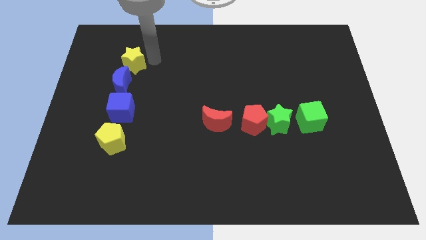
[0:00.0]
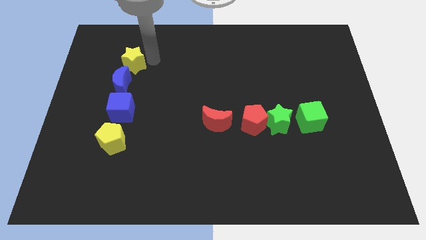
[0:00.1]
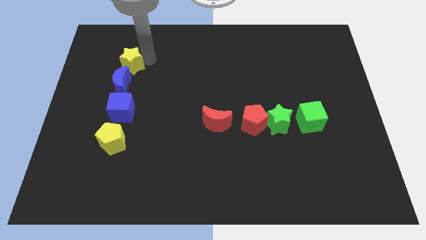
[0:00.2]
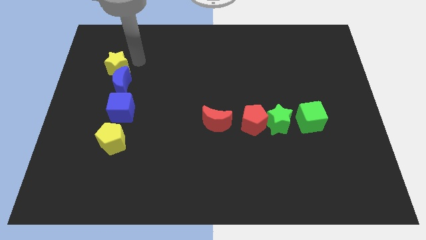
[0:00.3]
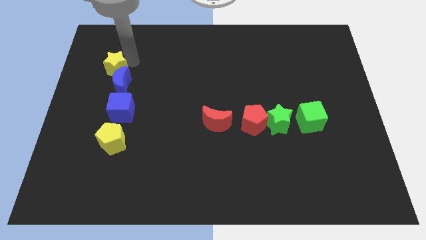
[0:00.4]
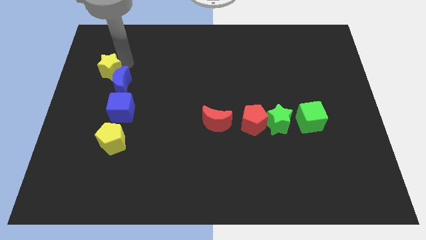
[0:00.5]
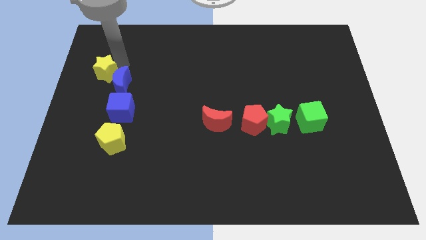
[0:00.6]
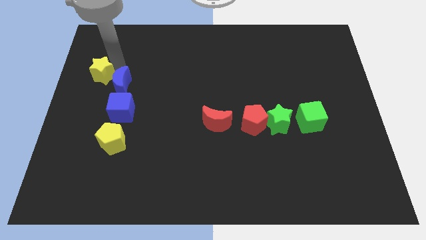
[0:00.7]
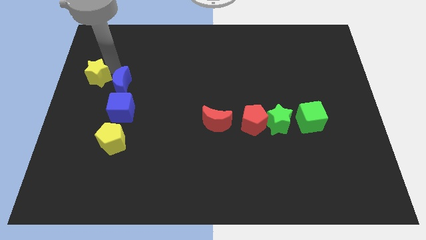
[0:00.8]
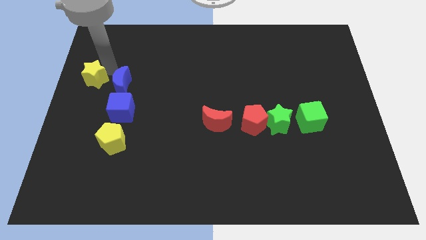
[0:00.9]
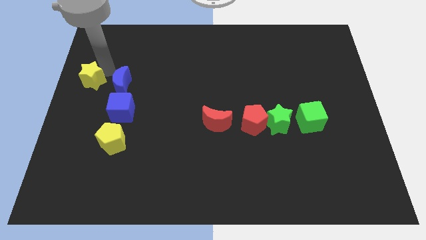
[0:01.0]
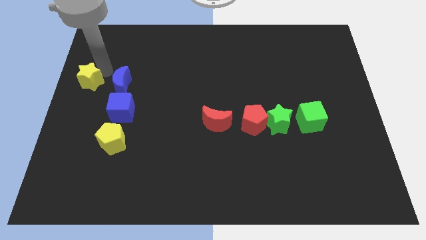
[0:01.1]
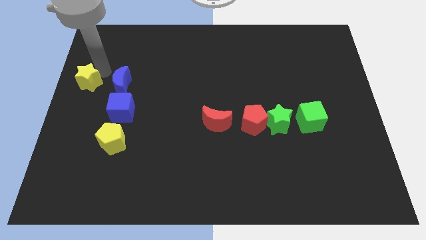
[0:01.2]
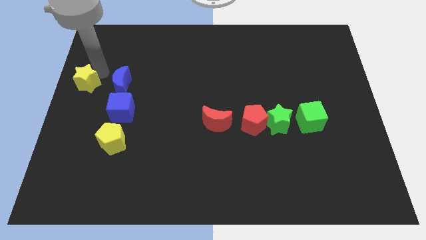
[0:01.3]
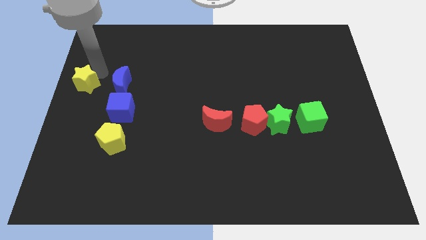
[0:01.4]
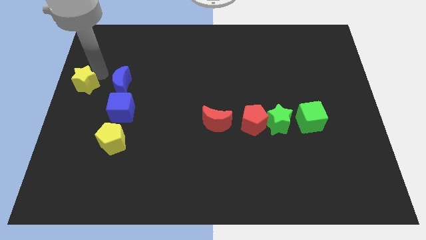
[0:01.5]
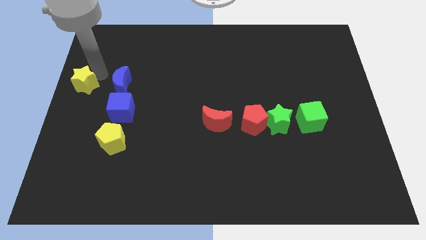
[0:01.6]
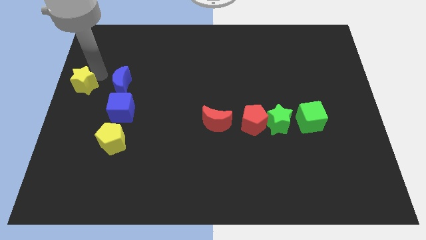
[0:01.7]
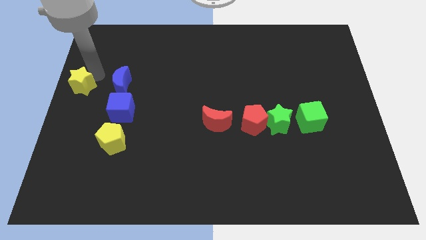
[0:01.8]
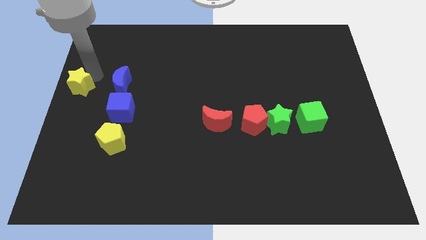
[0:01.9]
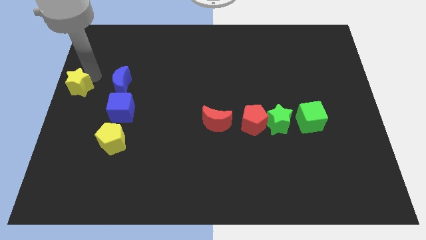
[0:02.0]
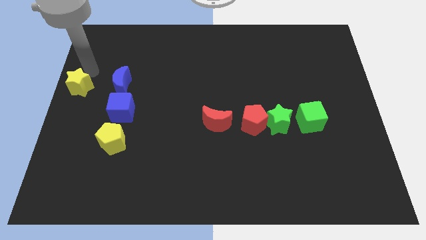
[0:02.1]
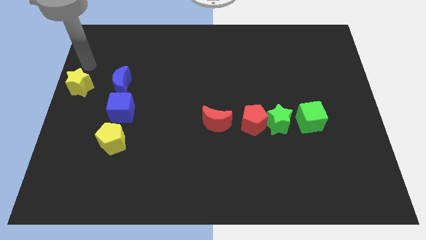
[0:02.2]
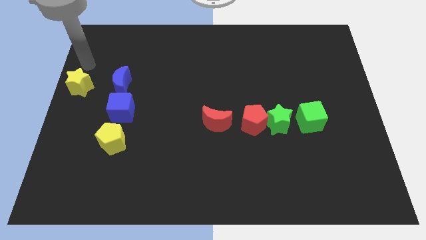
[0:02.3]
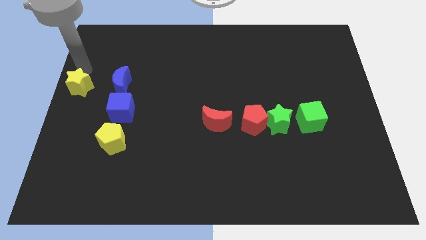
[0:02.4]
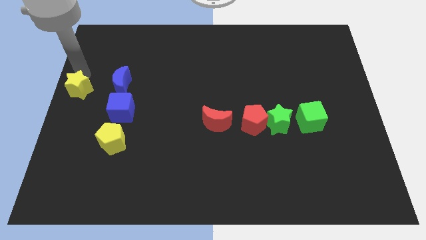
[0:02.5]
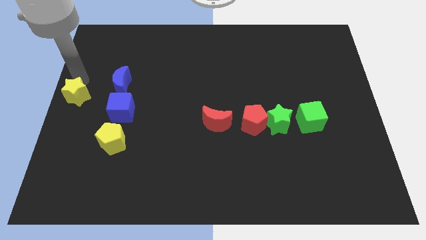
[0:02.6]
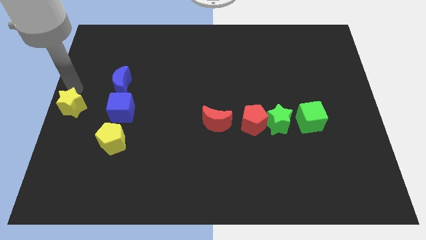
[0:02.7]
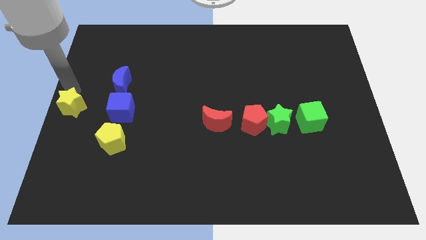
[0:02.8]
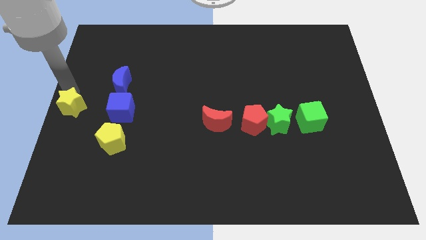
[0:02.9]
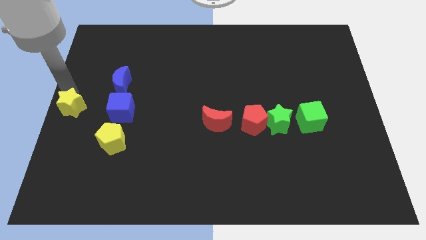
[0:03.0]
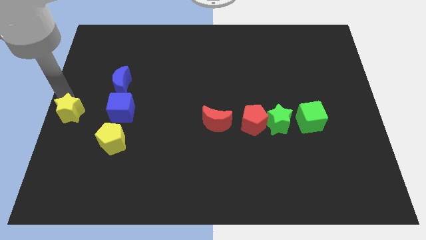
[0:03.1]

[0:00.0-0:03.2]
push yellow star to the left of blue cube

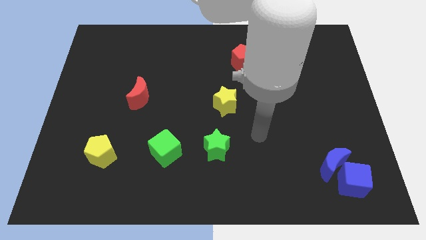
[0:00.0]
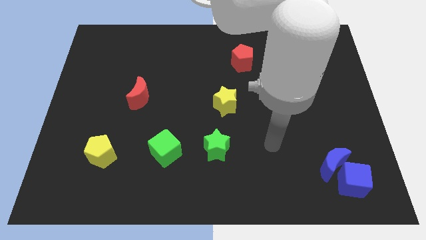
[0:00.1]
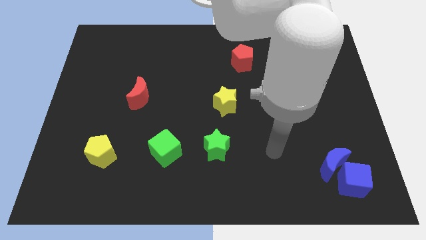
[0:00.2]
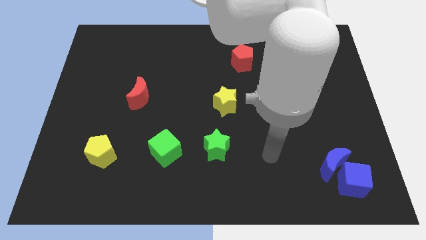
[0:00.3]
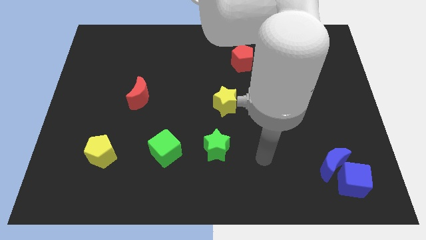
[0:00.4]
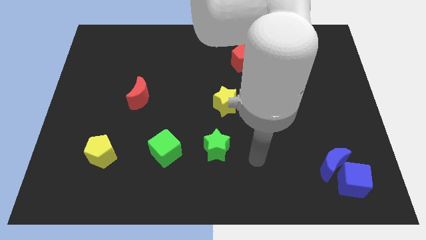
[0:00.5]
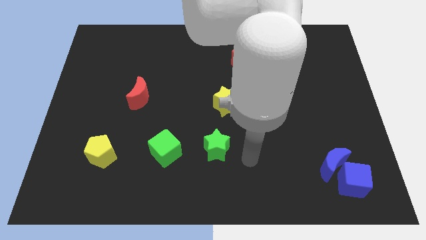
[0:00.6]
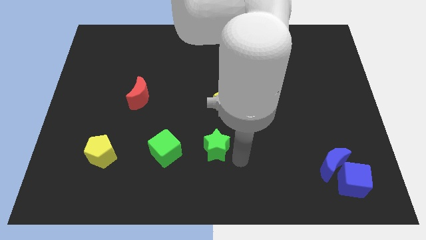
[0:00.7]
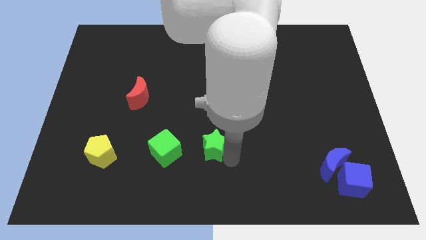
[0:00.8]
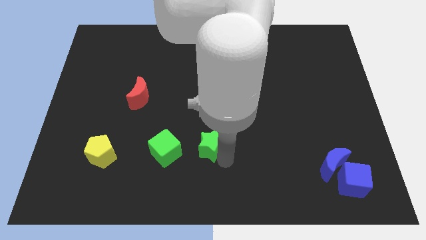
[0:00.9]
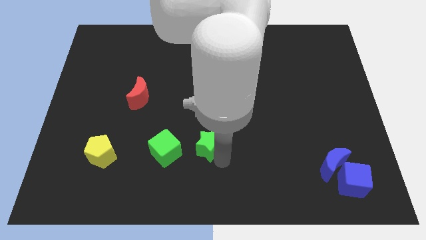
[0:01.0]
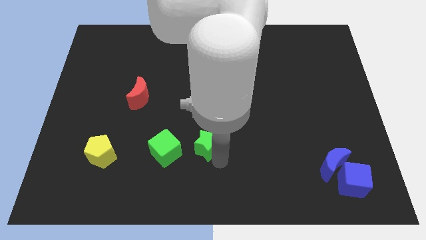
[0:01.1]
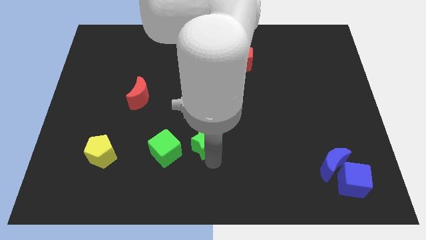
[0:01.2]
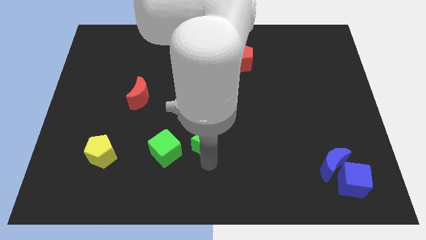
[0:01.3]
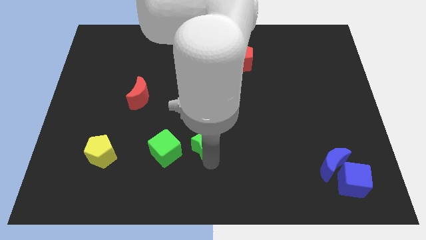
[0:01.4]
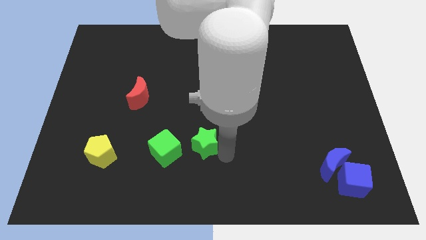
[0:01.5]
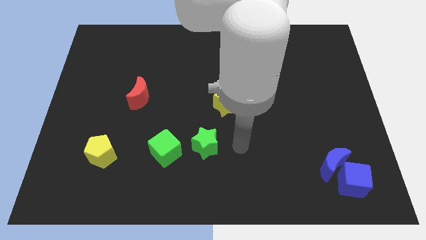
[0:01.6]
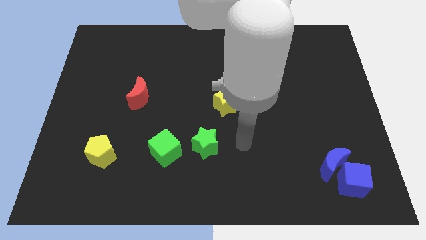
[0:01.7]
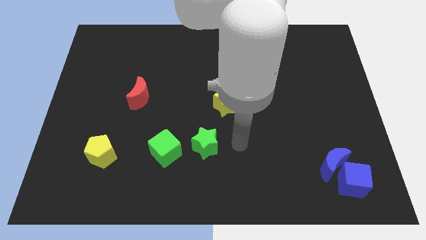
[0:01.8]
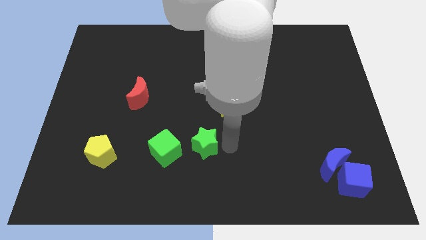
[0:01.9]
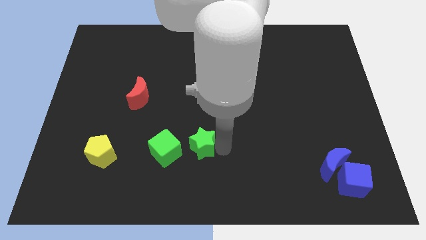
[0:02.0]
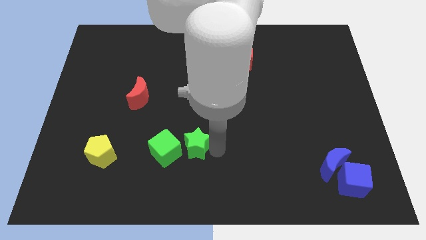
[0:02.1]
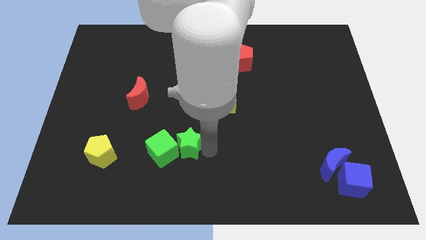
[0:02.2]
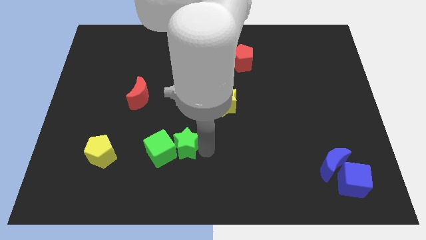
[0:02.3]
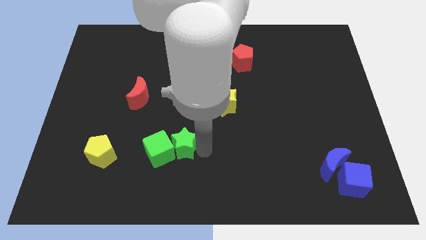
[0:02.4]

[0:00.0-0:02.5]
push green star to the right of green cube

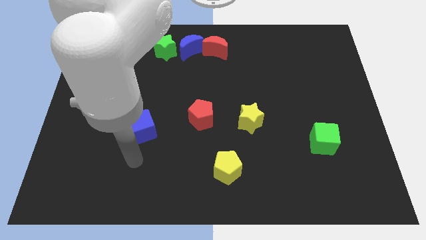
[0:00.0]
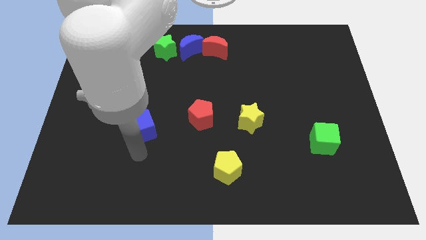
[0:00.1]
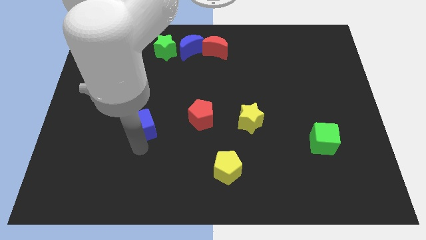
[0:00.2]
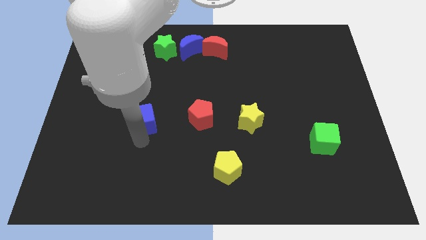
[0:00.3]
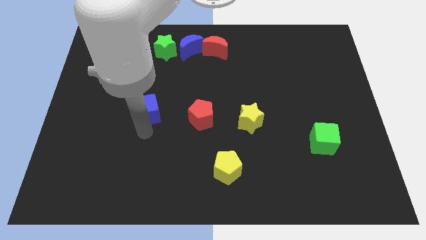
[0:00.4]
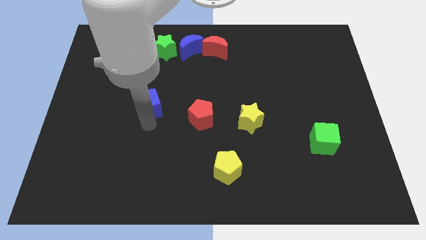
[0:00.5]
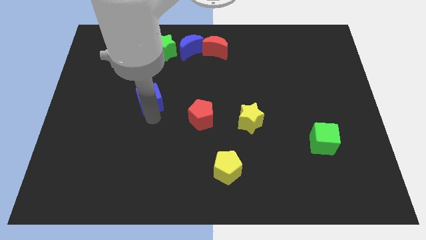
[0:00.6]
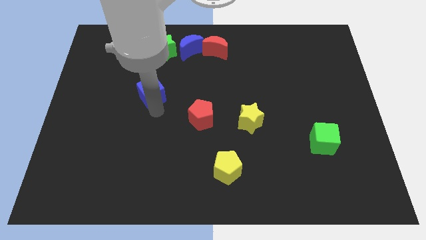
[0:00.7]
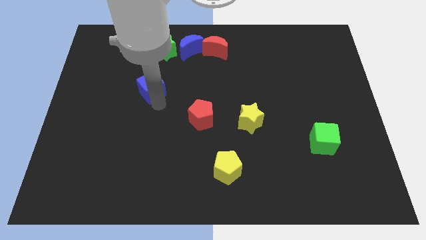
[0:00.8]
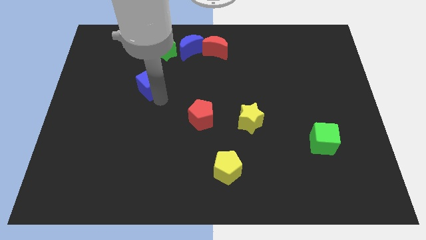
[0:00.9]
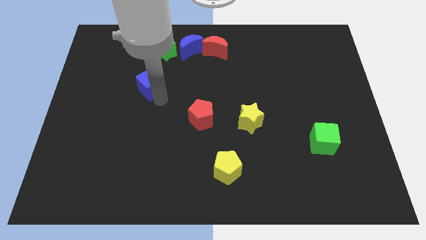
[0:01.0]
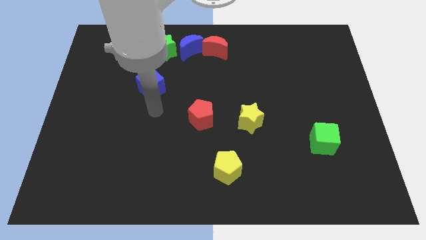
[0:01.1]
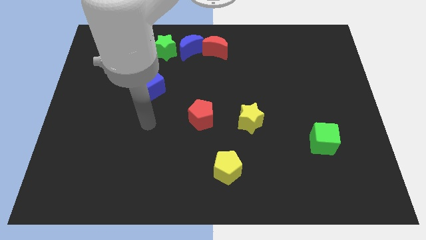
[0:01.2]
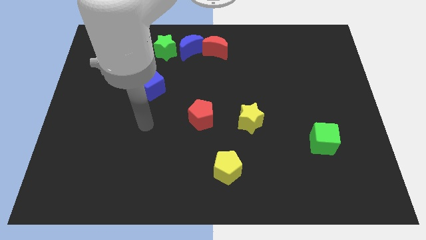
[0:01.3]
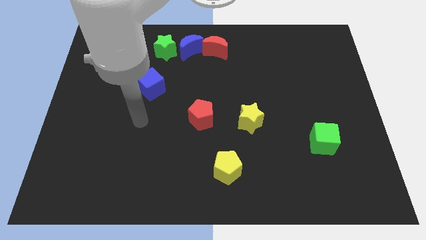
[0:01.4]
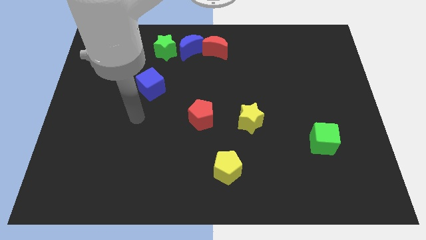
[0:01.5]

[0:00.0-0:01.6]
push the blue cube slightly towards up

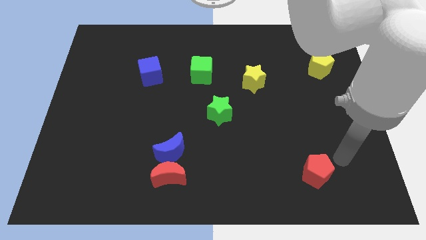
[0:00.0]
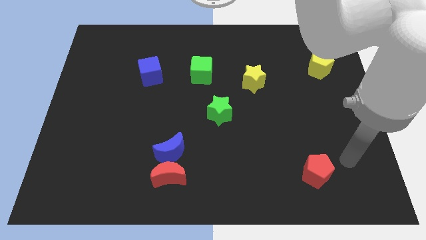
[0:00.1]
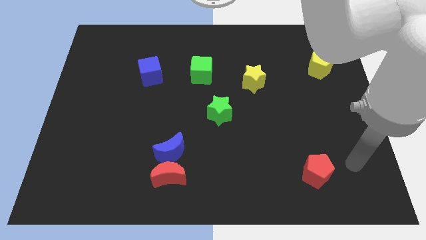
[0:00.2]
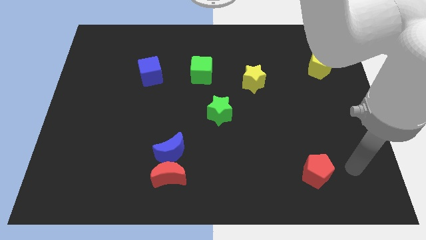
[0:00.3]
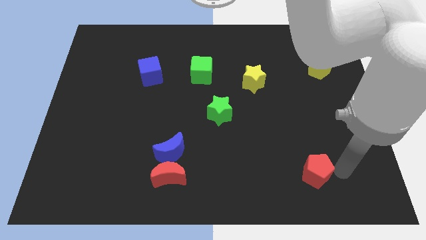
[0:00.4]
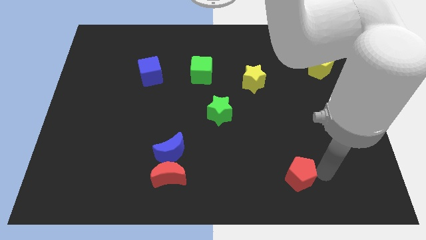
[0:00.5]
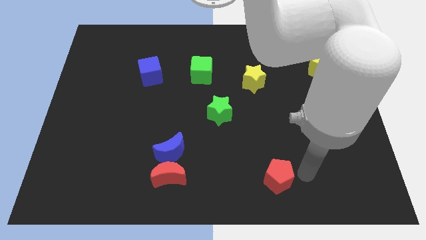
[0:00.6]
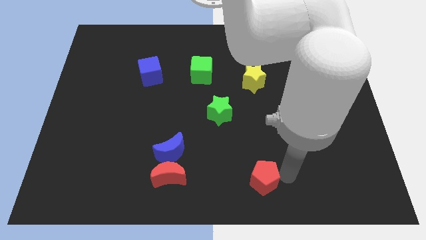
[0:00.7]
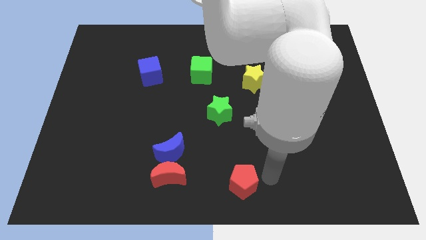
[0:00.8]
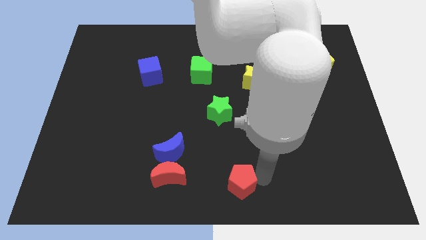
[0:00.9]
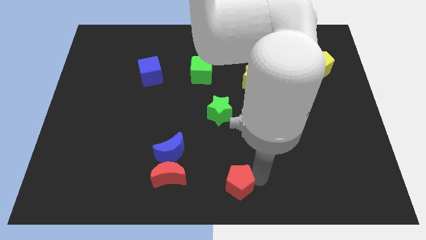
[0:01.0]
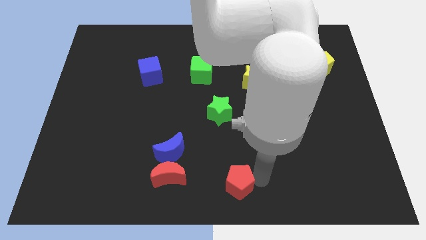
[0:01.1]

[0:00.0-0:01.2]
push the red pentagon towards the bottom center of the board

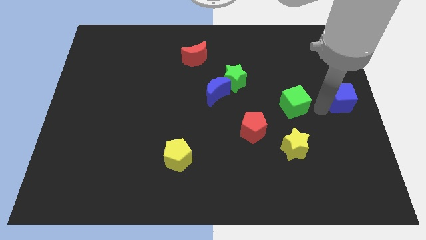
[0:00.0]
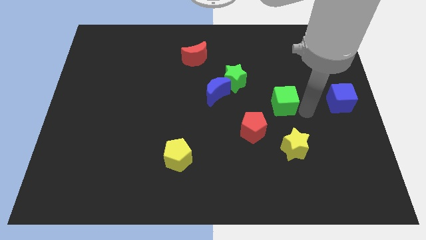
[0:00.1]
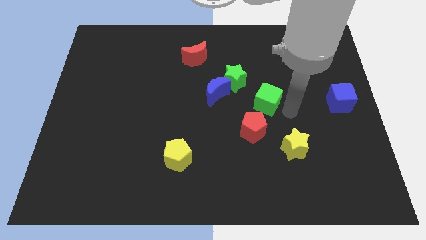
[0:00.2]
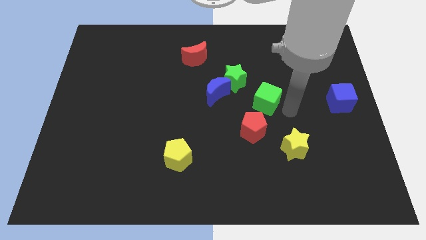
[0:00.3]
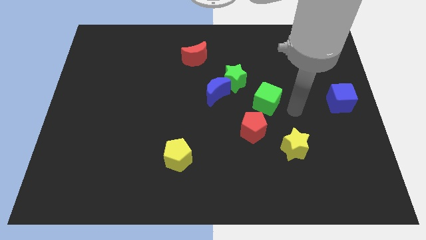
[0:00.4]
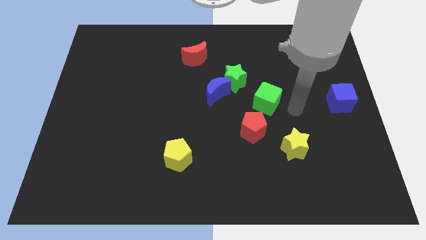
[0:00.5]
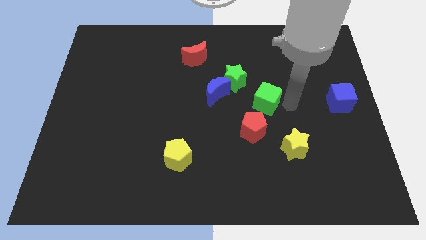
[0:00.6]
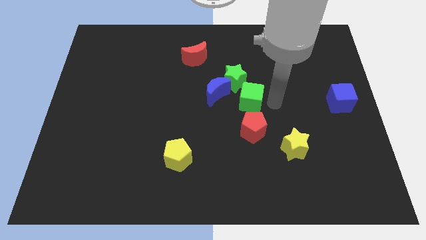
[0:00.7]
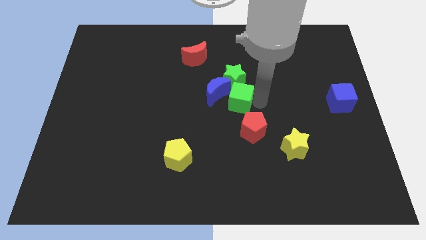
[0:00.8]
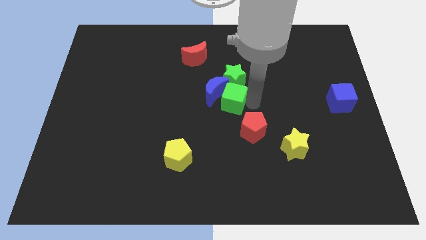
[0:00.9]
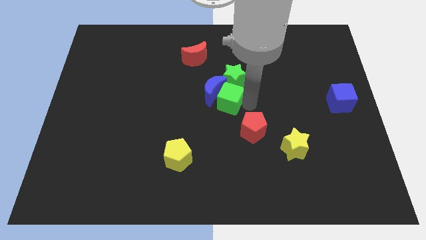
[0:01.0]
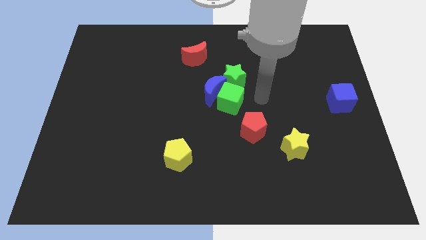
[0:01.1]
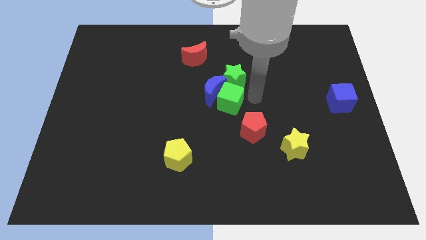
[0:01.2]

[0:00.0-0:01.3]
move the green cube into the blue crescent
